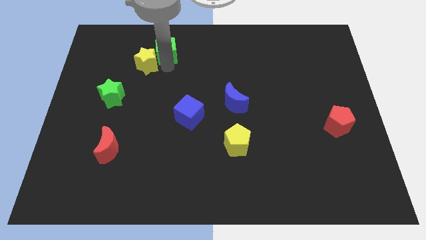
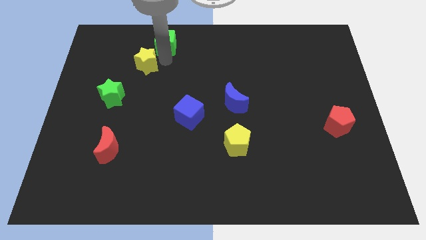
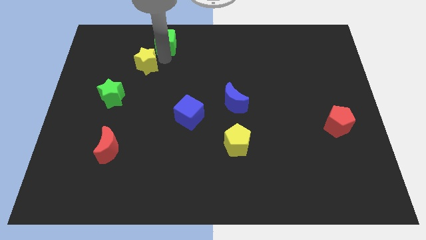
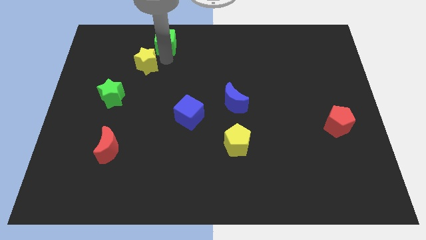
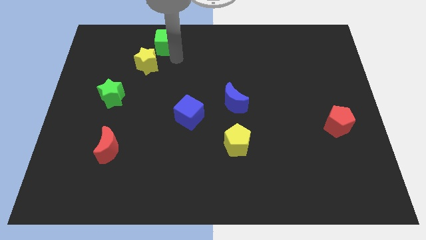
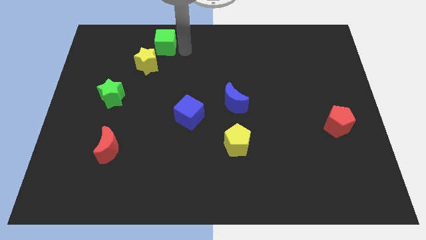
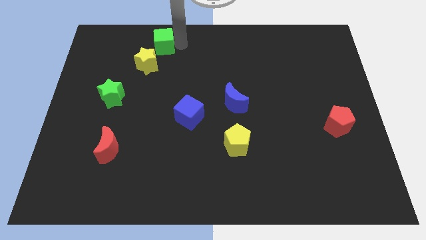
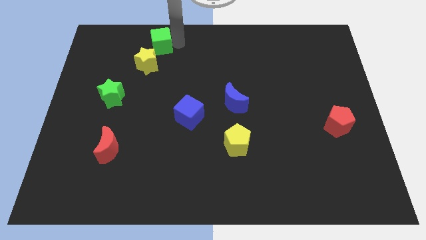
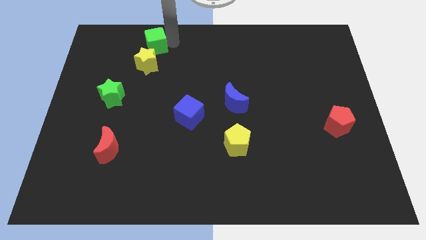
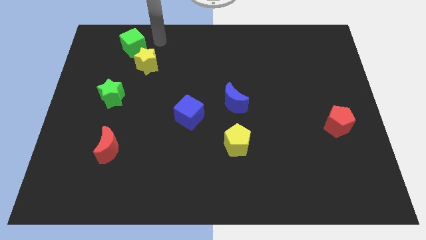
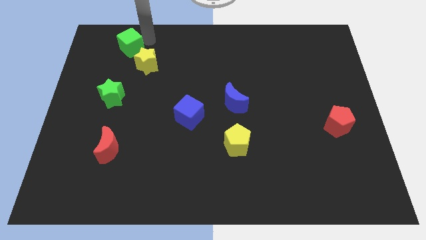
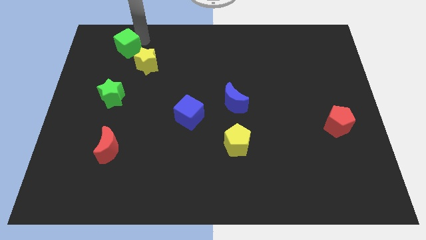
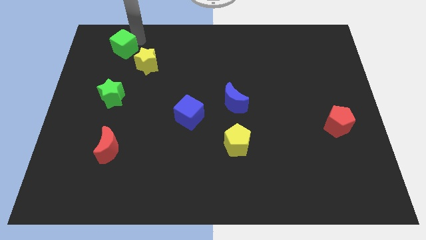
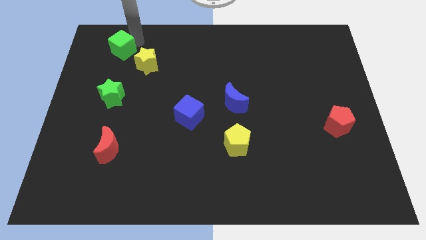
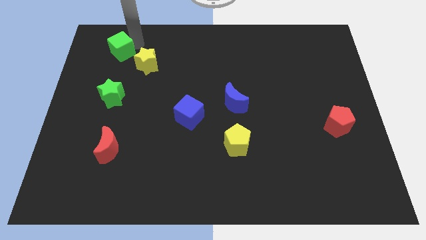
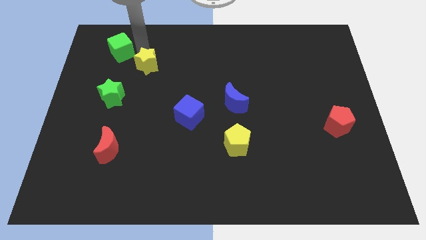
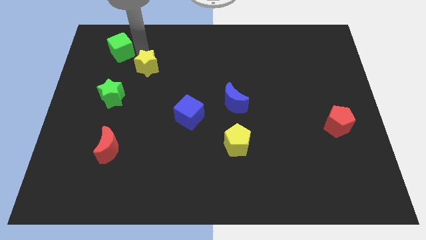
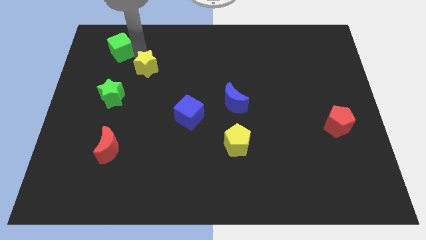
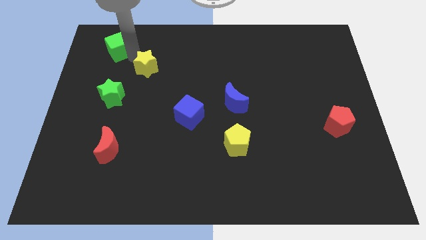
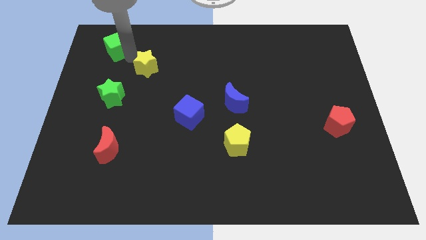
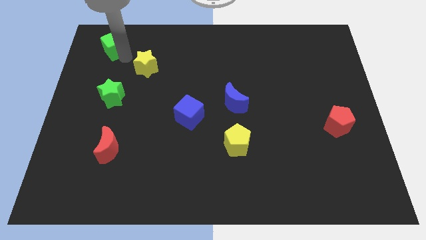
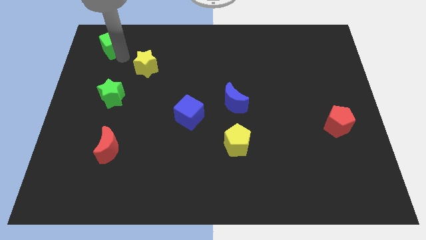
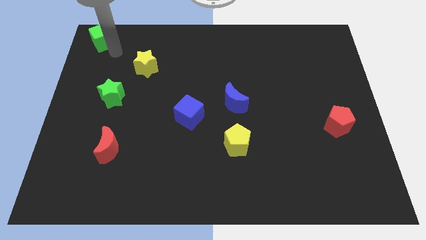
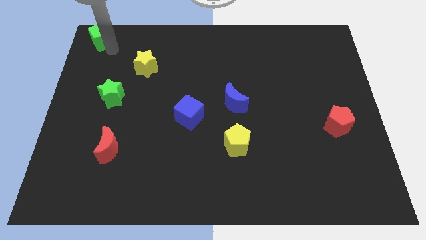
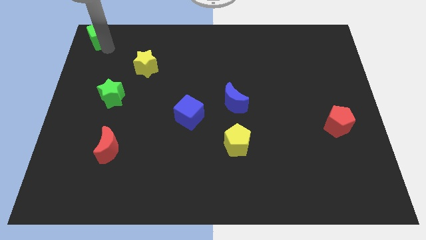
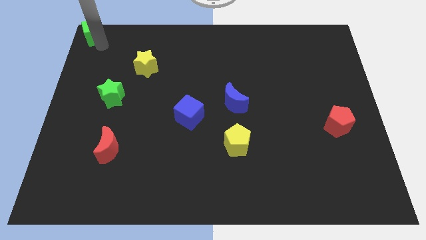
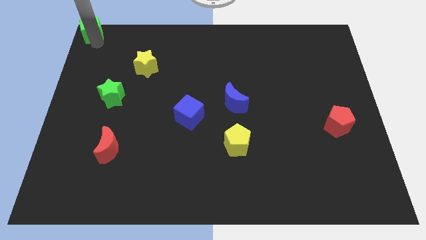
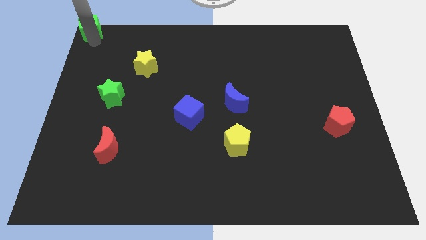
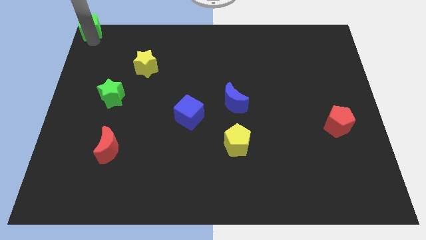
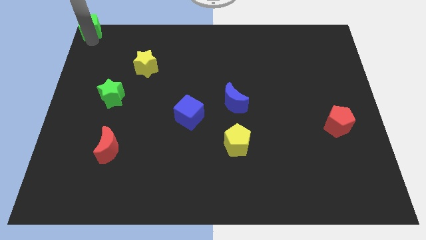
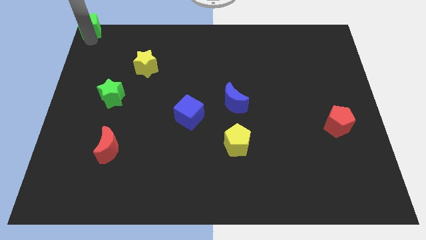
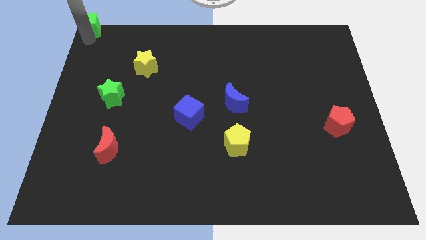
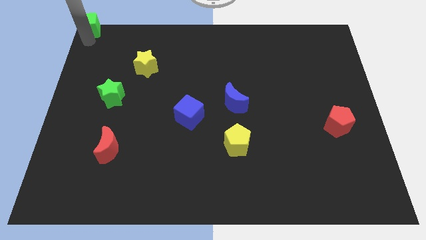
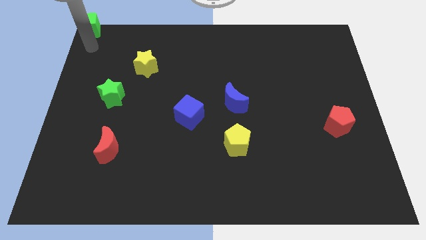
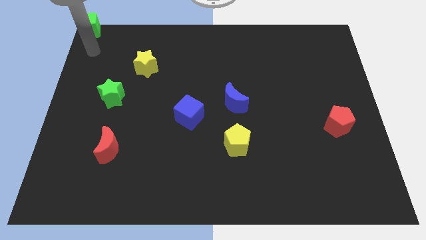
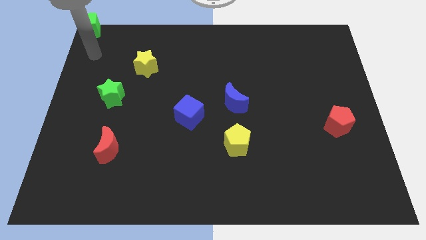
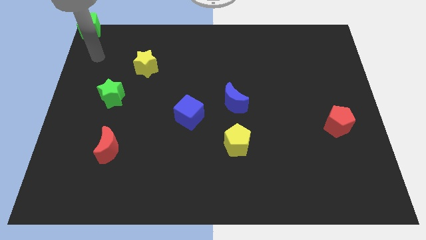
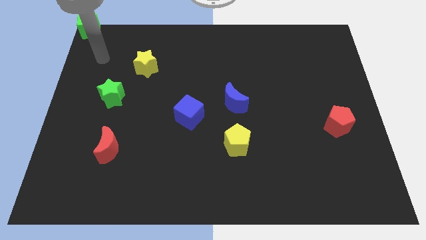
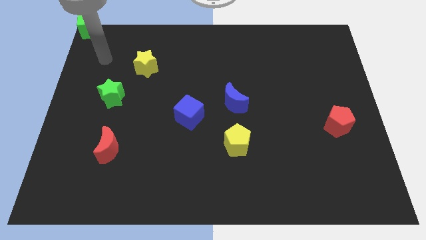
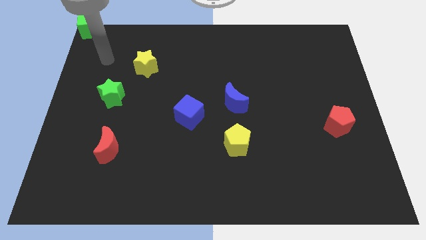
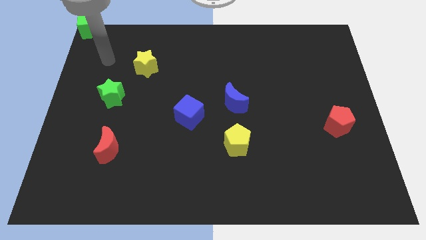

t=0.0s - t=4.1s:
place the green cube diagonally to left to the yellow star

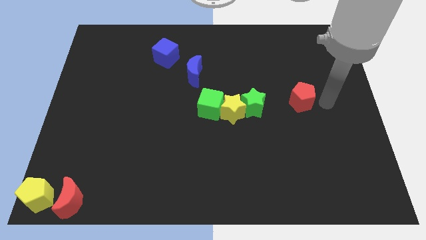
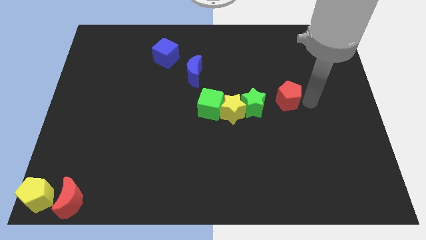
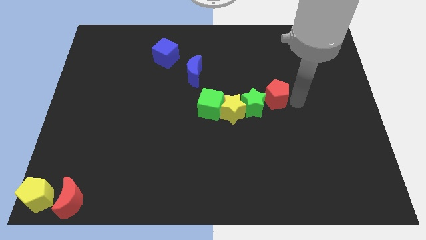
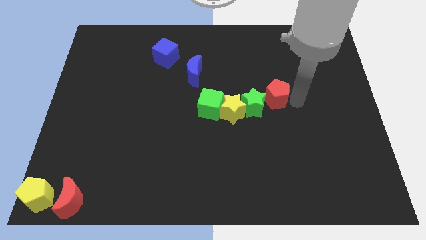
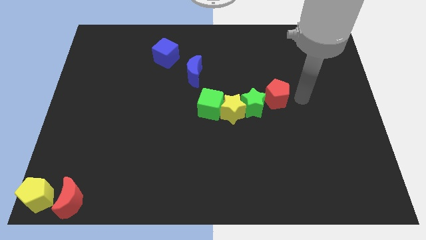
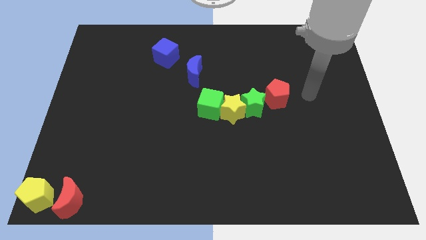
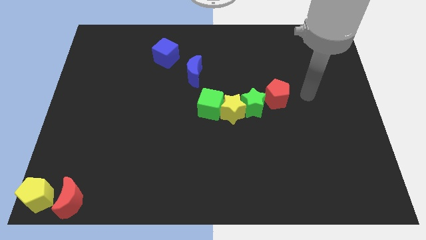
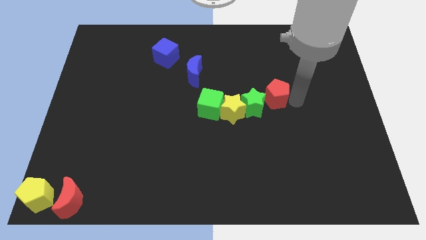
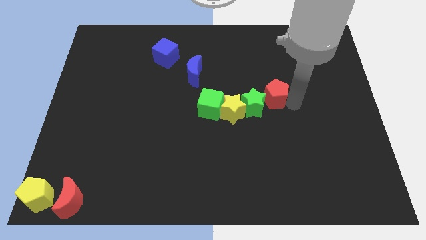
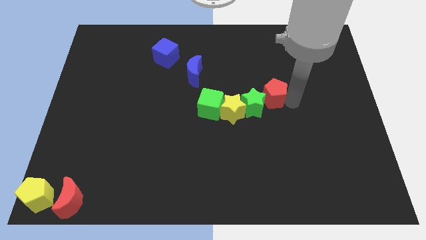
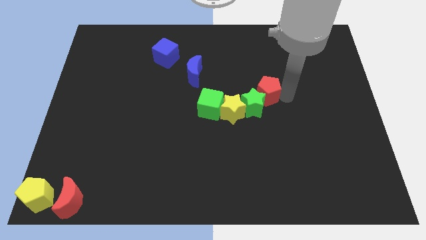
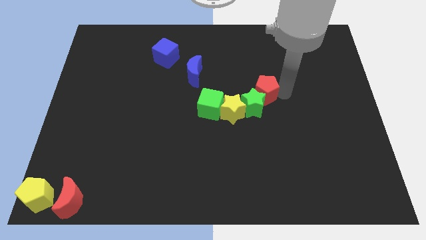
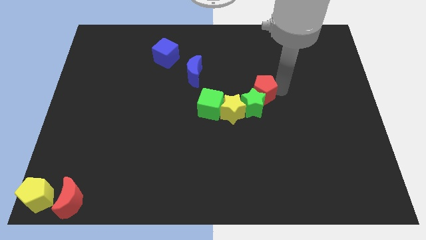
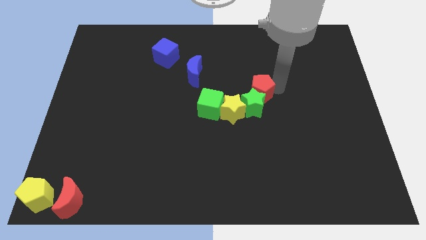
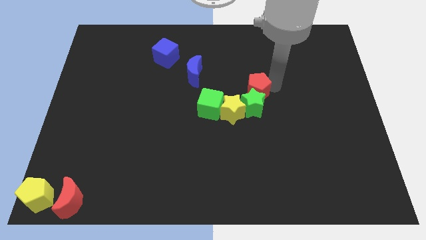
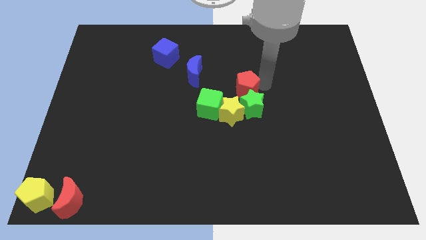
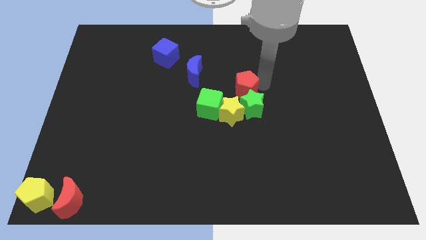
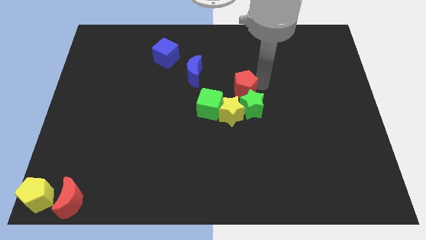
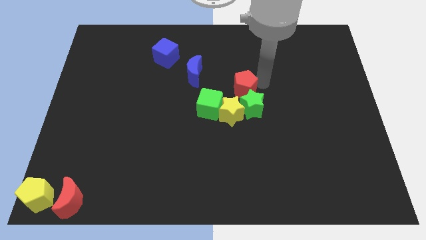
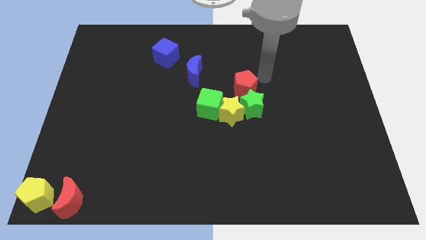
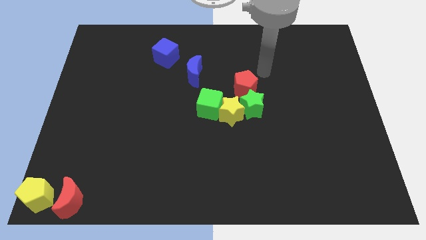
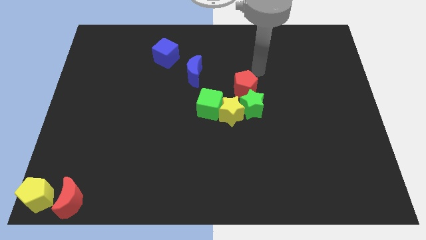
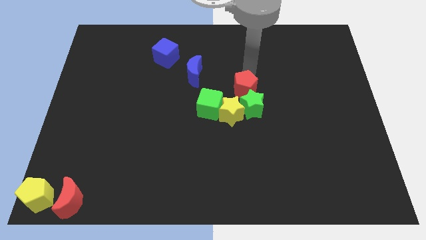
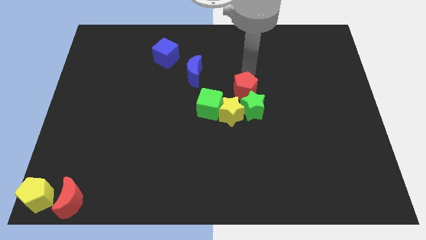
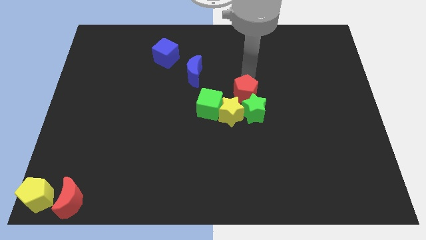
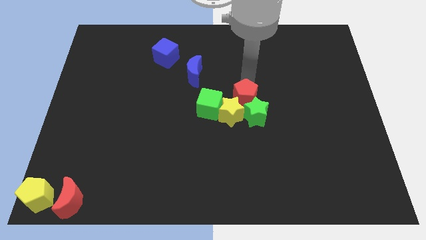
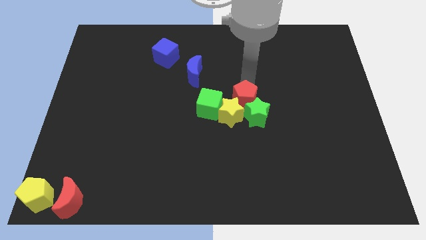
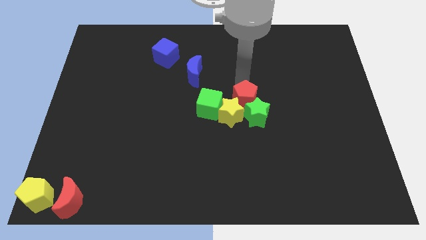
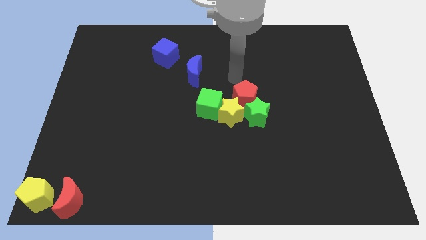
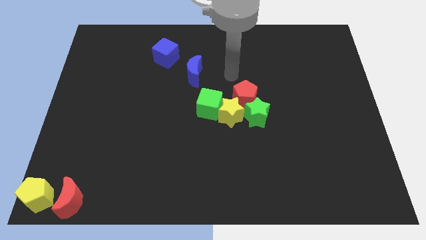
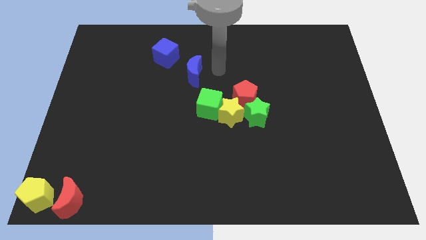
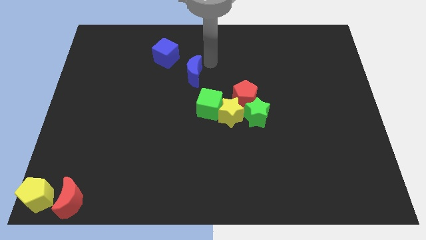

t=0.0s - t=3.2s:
push the green star with the red pentagon slightly towards the the bottom center of the board

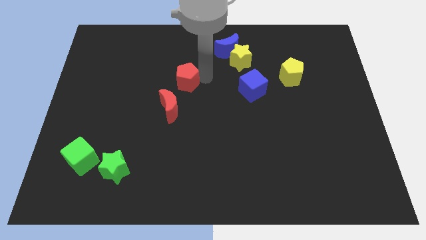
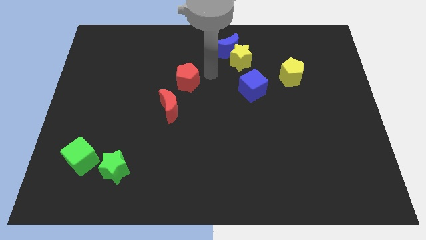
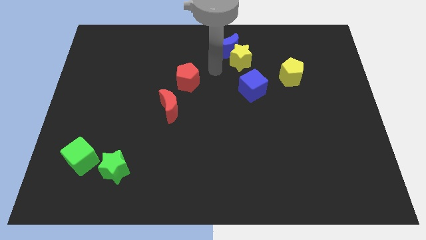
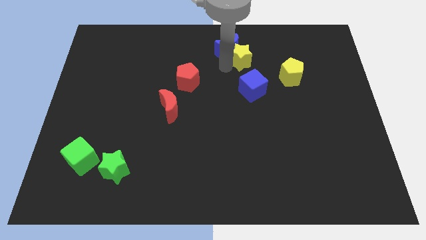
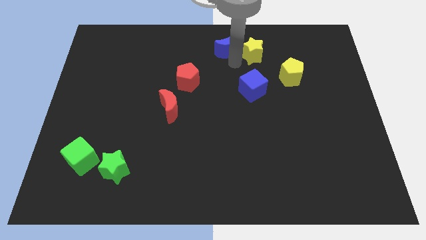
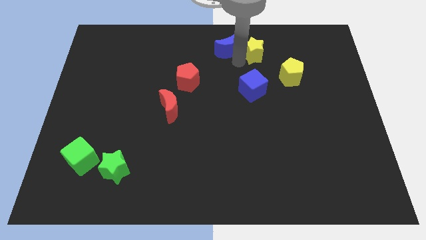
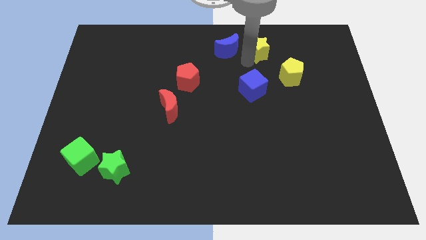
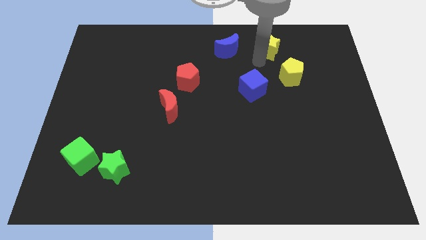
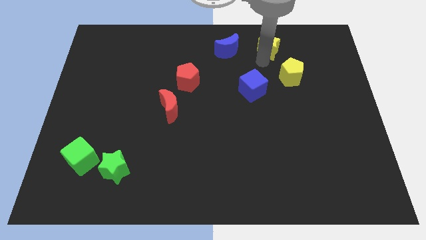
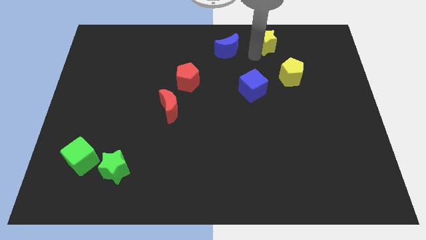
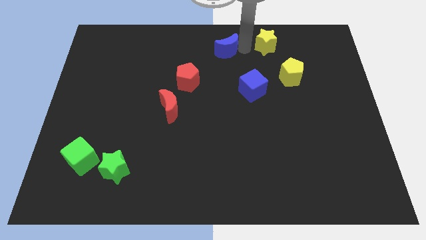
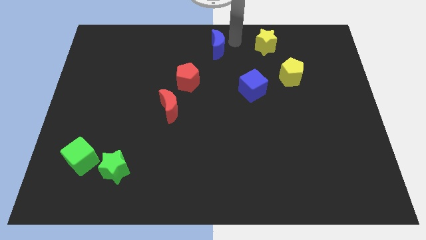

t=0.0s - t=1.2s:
push the yellow star to top

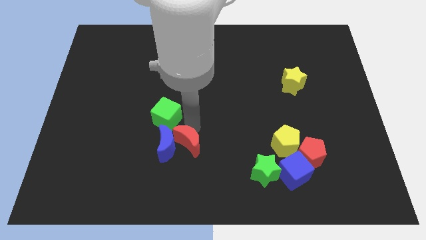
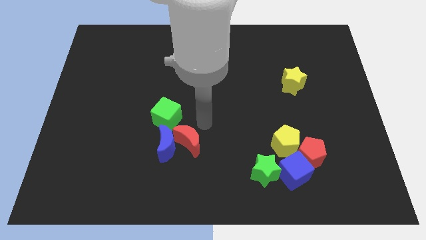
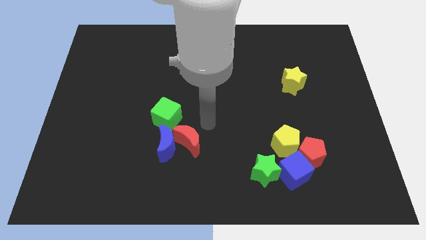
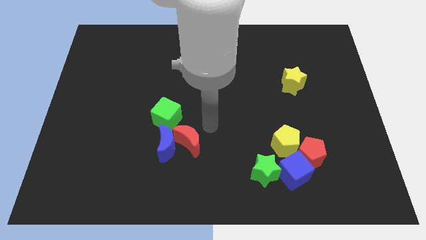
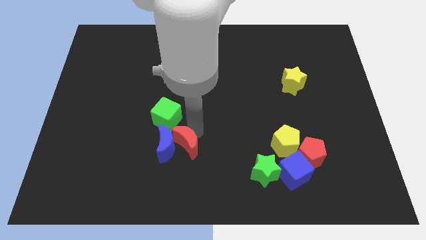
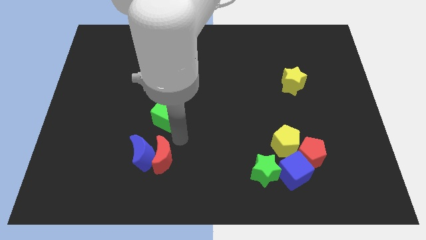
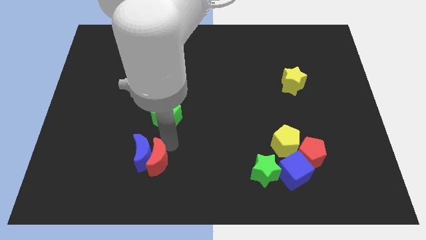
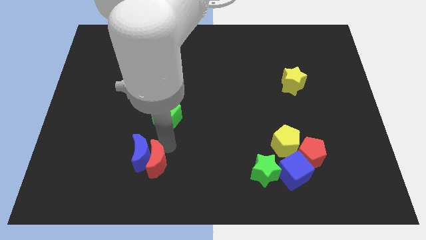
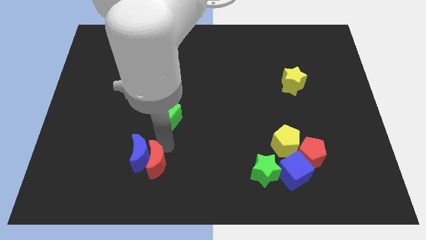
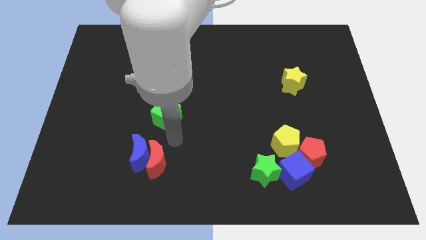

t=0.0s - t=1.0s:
push red crescent into blue crescent
